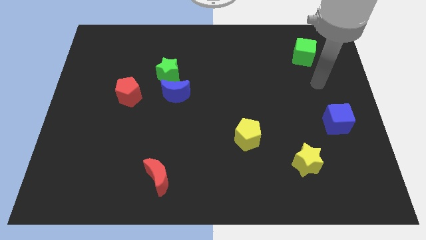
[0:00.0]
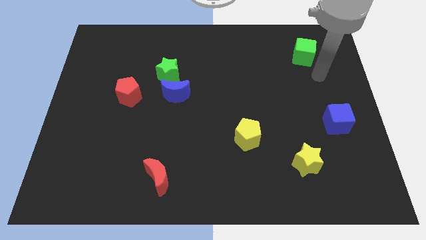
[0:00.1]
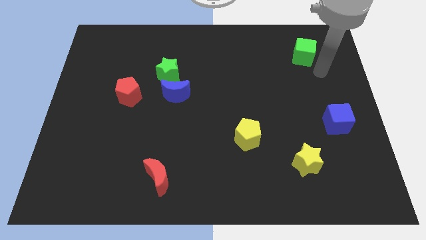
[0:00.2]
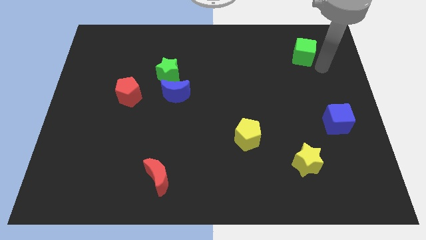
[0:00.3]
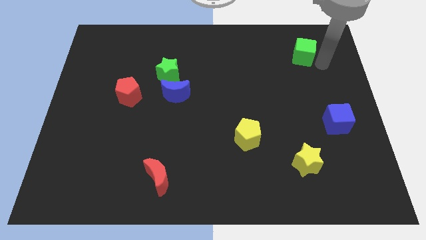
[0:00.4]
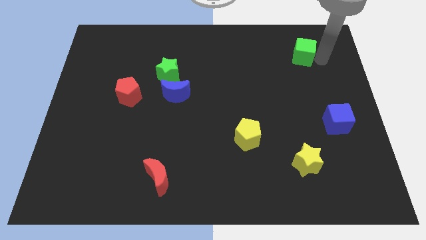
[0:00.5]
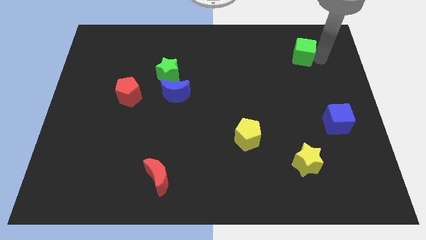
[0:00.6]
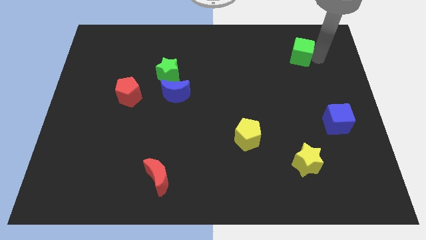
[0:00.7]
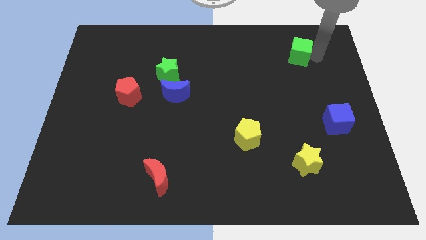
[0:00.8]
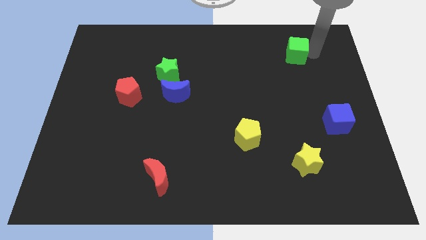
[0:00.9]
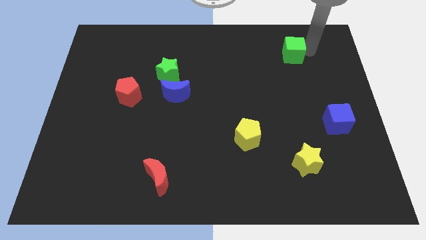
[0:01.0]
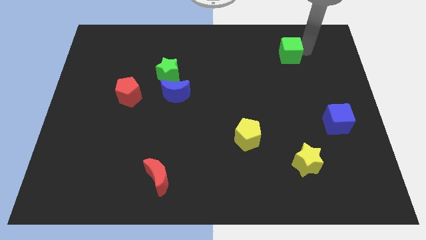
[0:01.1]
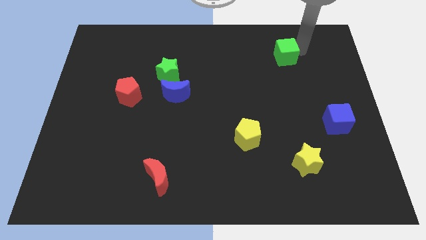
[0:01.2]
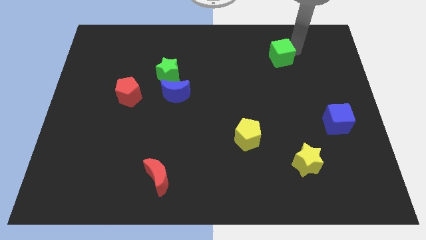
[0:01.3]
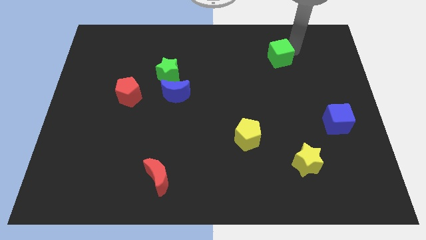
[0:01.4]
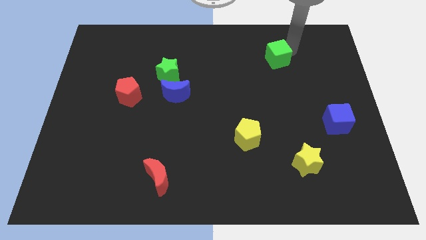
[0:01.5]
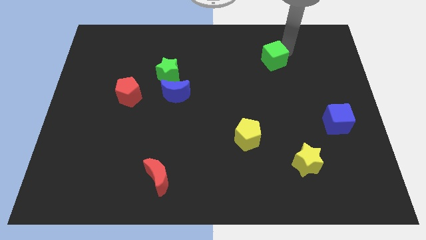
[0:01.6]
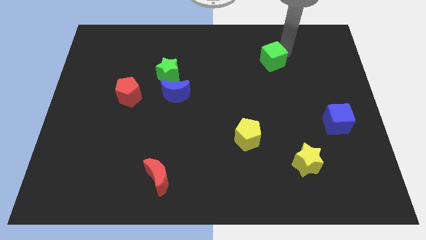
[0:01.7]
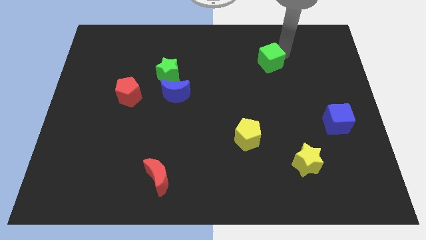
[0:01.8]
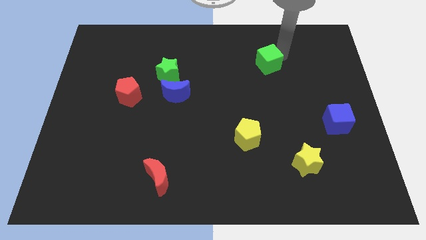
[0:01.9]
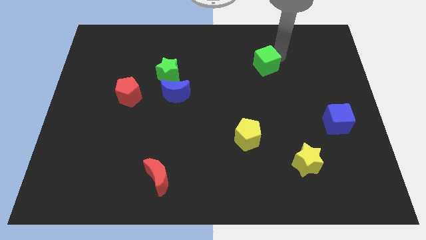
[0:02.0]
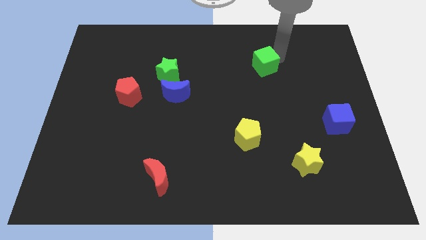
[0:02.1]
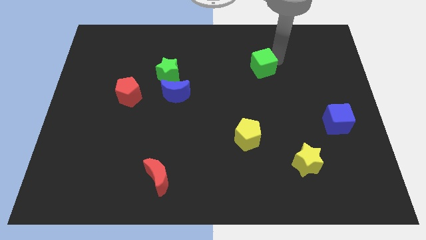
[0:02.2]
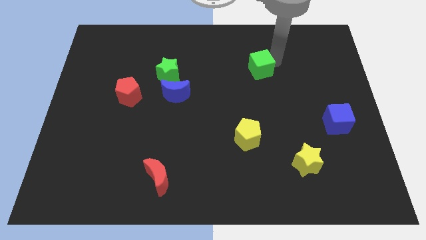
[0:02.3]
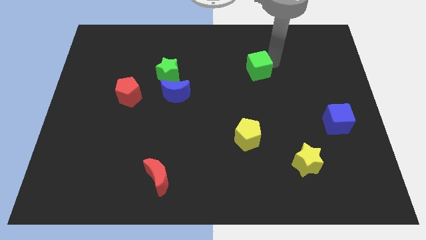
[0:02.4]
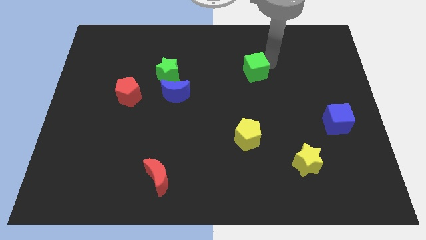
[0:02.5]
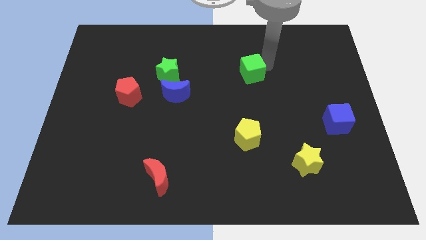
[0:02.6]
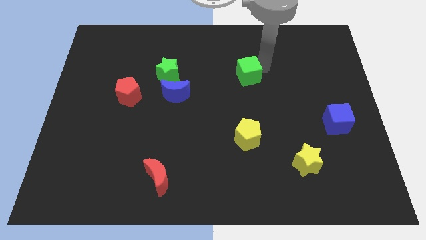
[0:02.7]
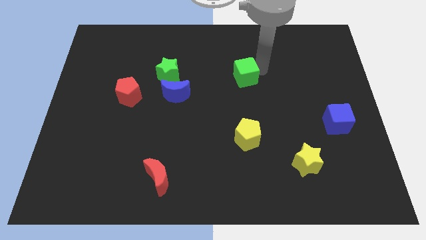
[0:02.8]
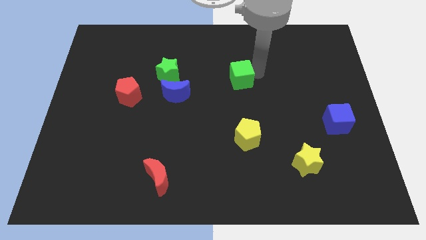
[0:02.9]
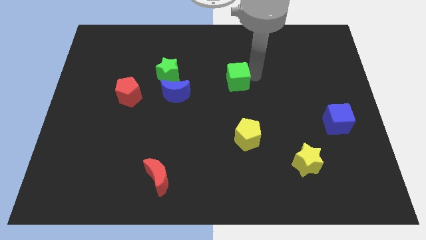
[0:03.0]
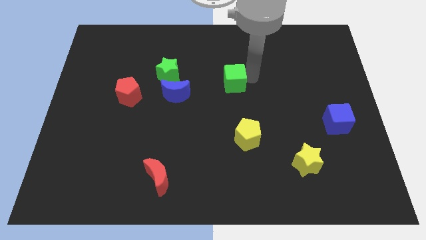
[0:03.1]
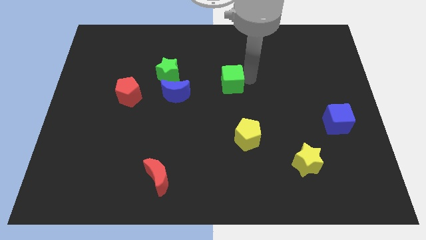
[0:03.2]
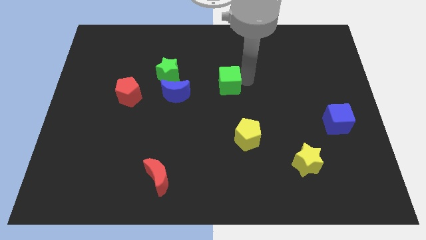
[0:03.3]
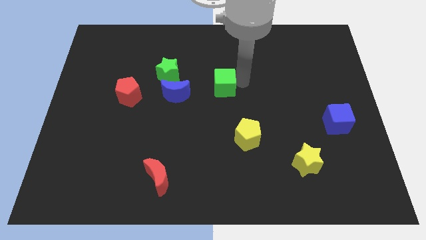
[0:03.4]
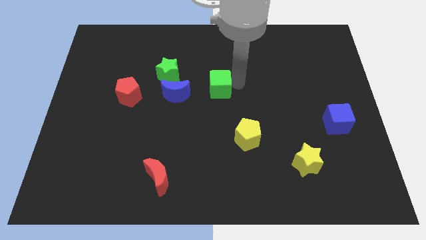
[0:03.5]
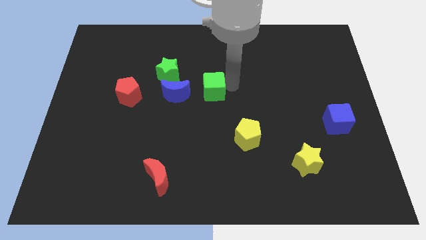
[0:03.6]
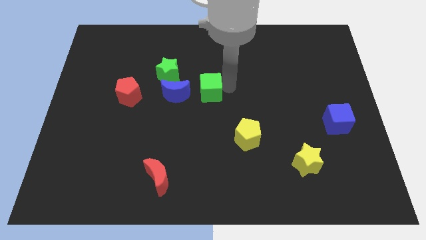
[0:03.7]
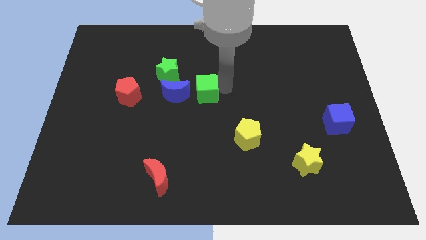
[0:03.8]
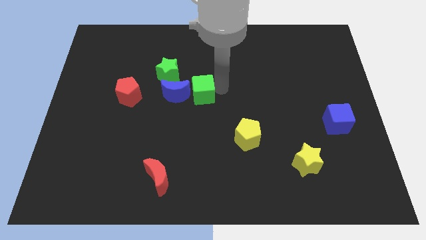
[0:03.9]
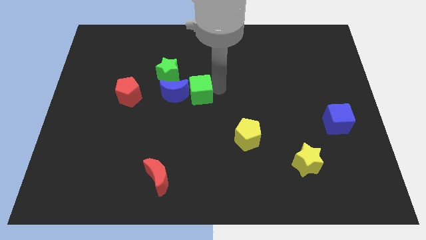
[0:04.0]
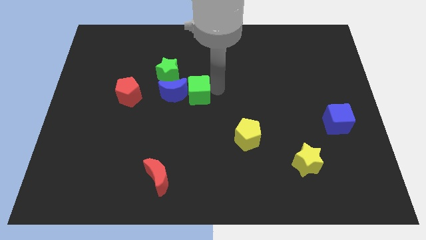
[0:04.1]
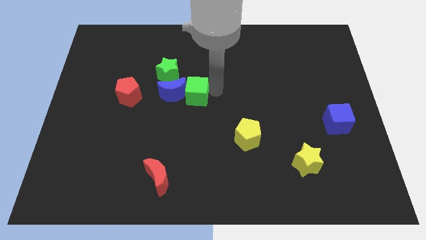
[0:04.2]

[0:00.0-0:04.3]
put the green cube towards the blue moon

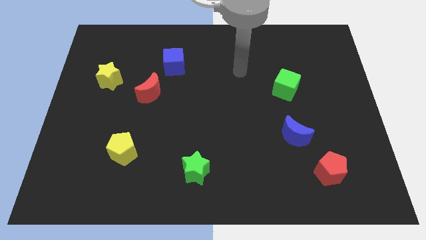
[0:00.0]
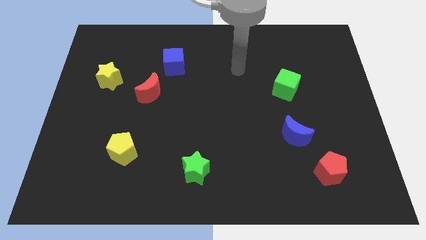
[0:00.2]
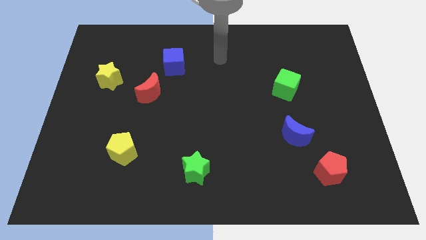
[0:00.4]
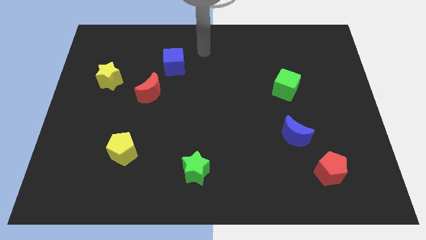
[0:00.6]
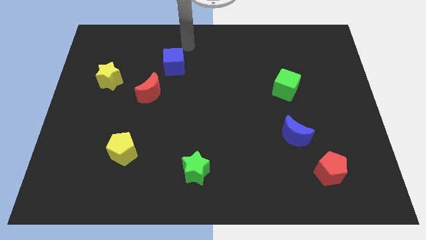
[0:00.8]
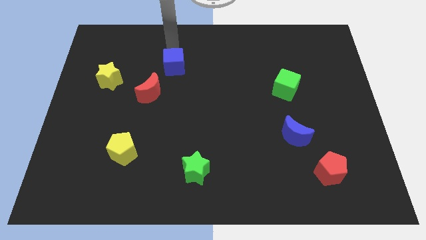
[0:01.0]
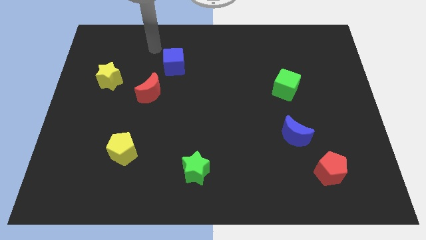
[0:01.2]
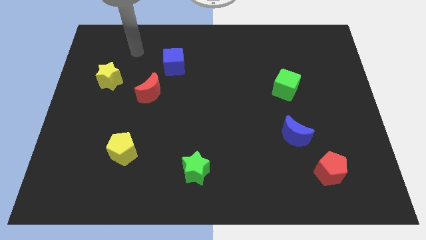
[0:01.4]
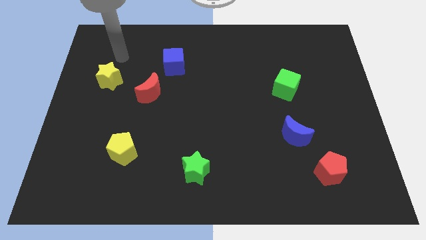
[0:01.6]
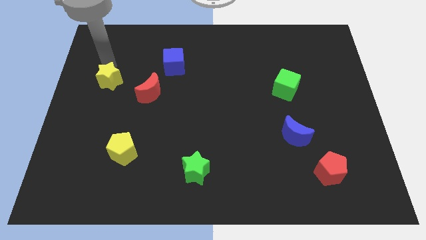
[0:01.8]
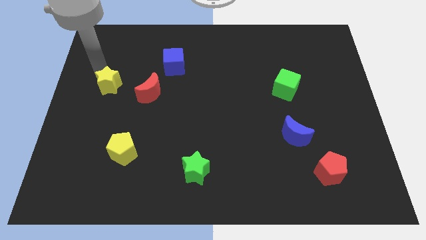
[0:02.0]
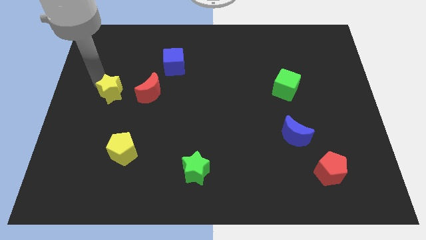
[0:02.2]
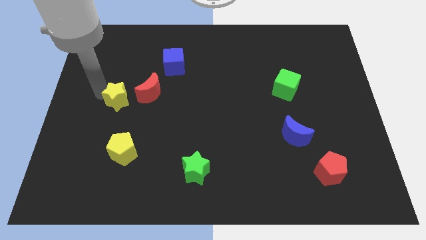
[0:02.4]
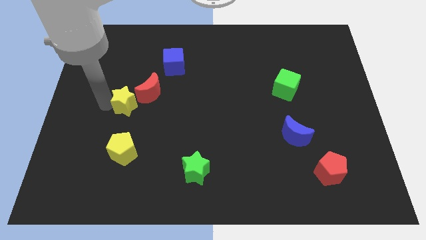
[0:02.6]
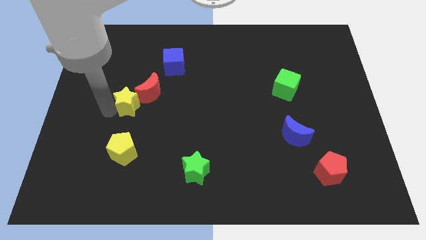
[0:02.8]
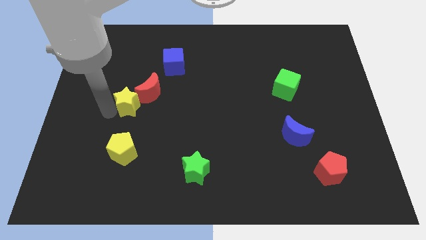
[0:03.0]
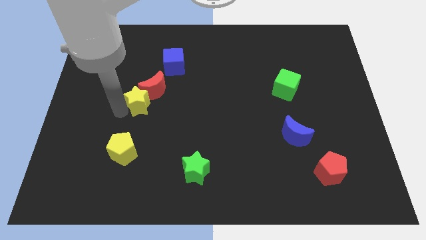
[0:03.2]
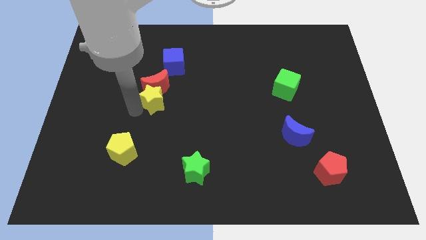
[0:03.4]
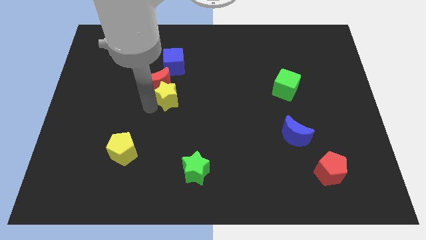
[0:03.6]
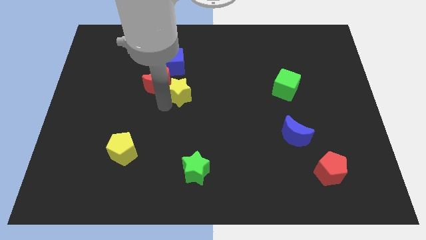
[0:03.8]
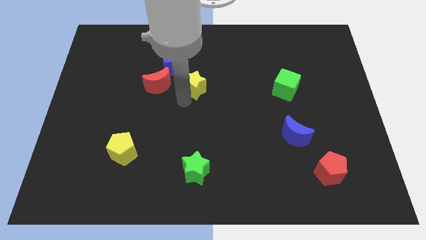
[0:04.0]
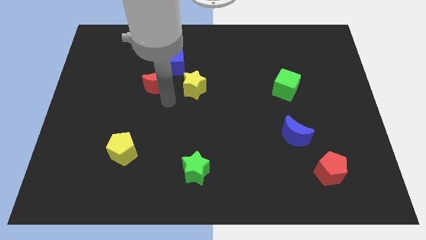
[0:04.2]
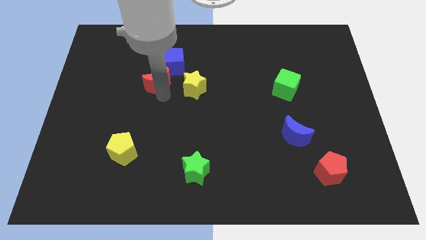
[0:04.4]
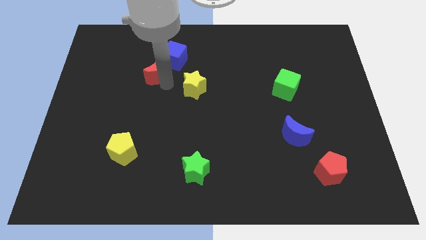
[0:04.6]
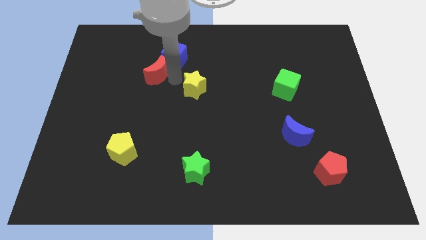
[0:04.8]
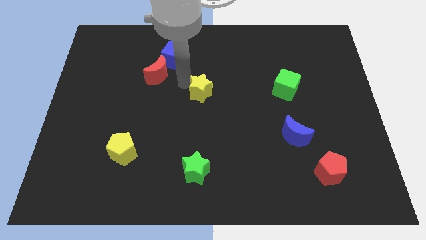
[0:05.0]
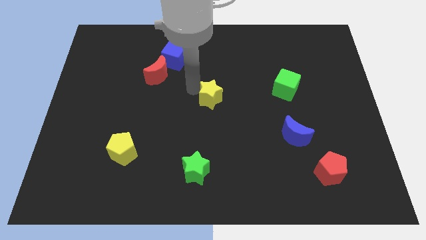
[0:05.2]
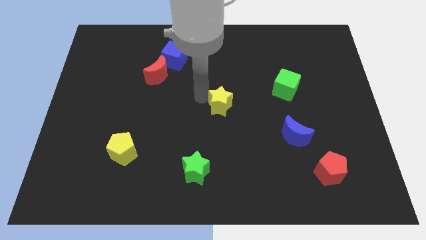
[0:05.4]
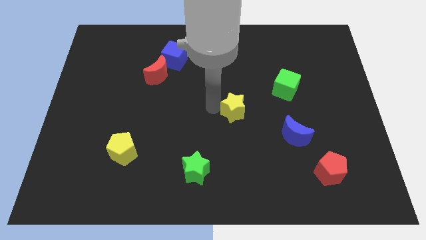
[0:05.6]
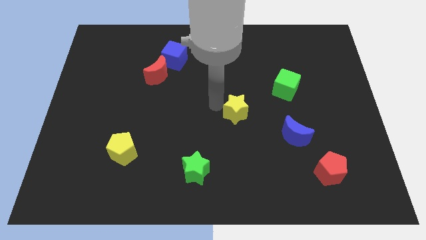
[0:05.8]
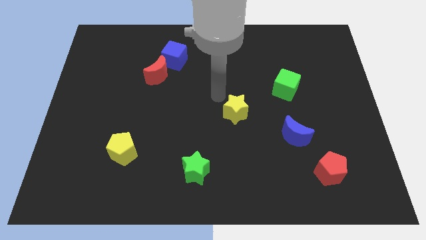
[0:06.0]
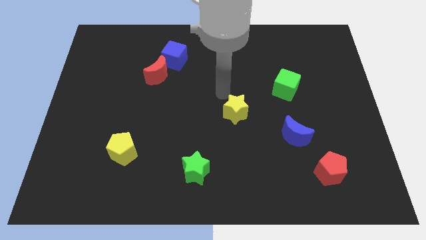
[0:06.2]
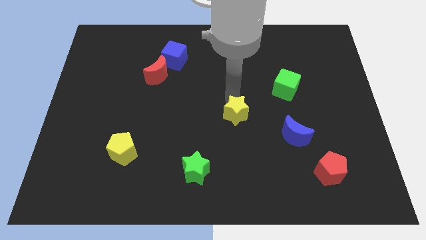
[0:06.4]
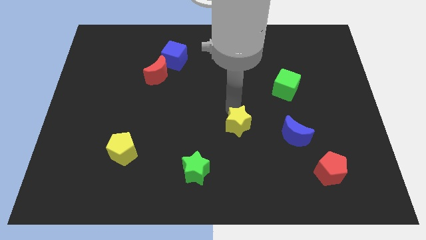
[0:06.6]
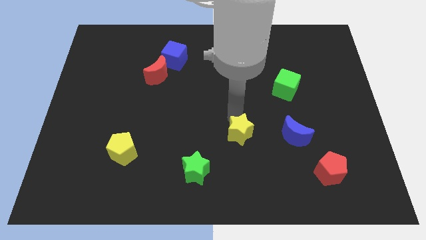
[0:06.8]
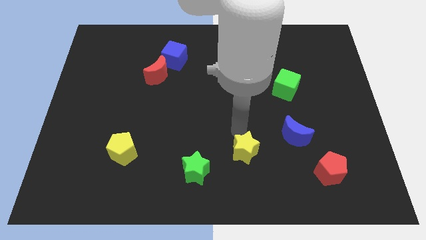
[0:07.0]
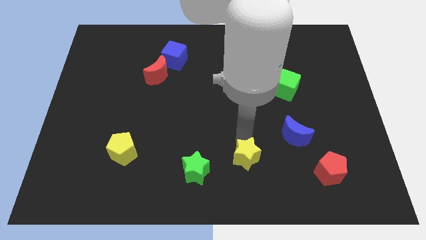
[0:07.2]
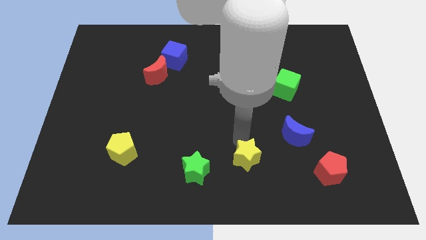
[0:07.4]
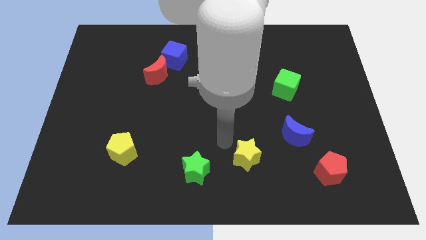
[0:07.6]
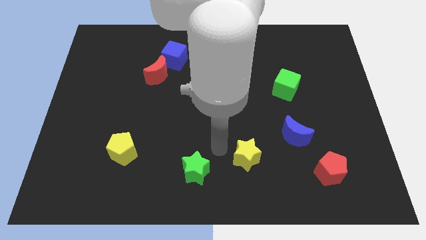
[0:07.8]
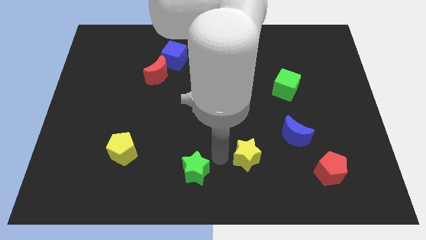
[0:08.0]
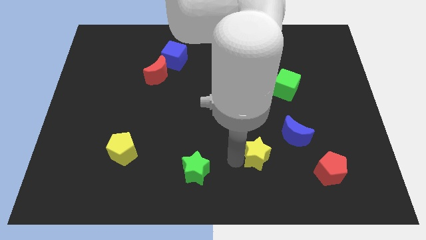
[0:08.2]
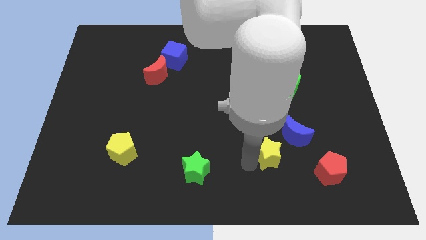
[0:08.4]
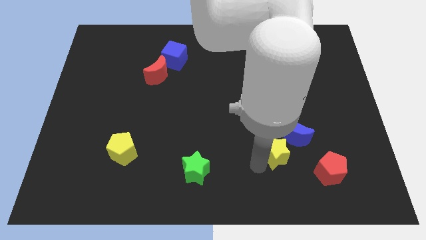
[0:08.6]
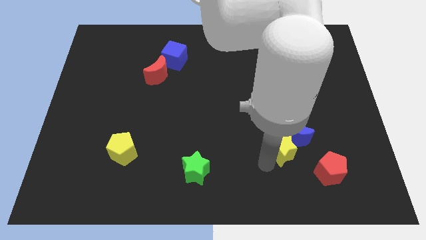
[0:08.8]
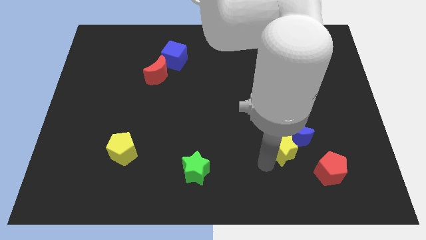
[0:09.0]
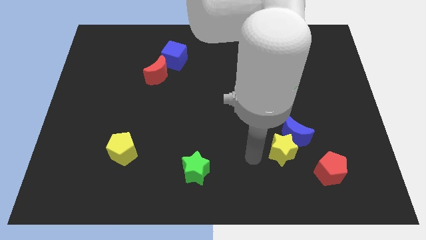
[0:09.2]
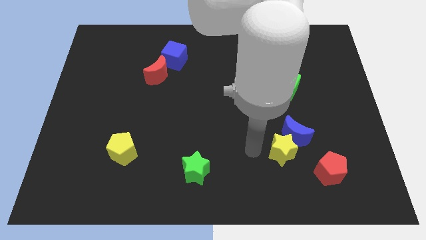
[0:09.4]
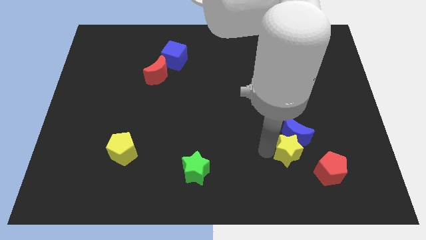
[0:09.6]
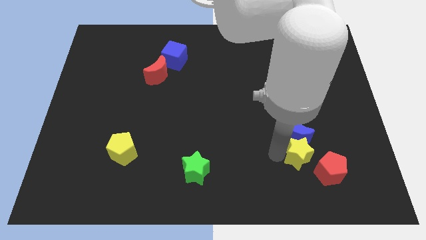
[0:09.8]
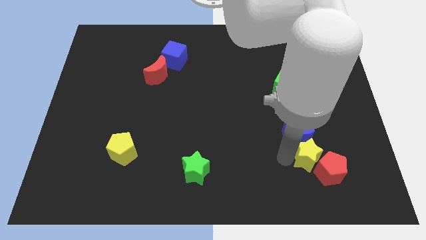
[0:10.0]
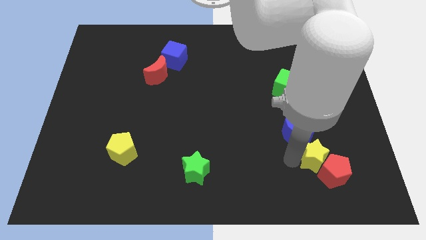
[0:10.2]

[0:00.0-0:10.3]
push the yellow star to the red pentagon
